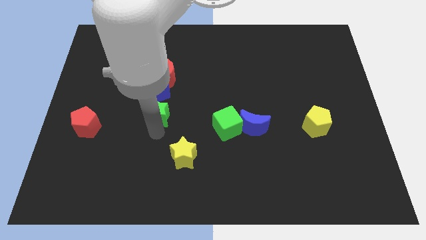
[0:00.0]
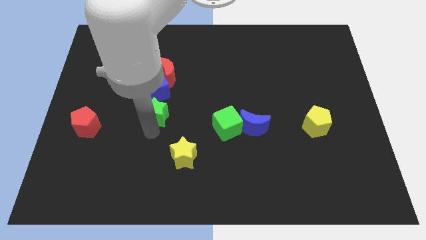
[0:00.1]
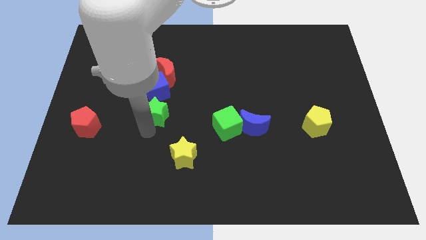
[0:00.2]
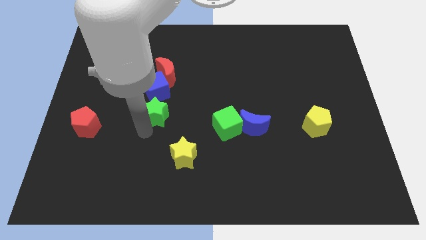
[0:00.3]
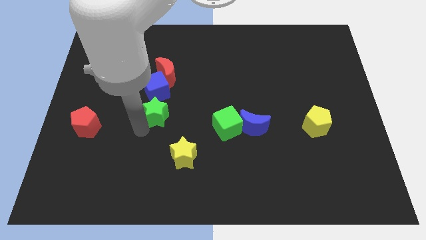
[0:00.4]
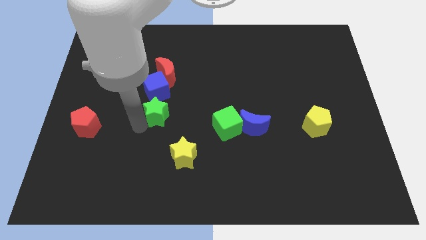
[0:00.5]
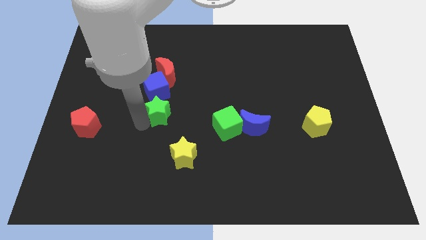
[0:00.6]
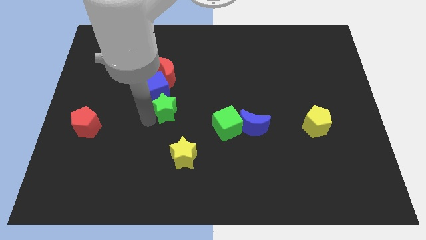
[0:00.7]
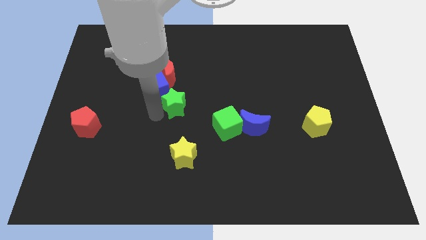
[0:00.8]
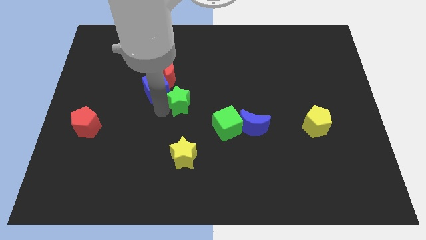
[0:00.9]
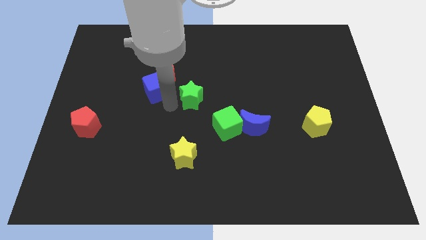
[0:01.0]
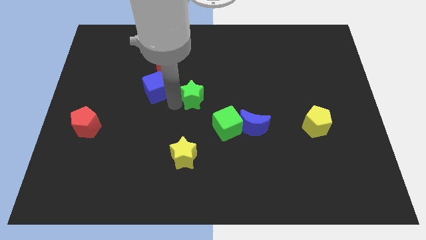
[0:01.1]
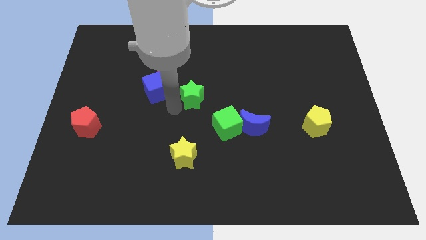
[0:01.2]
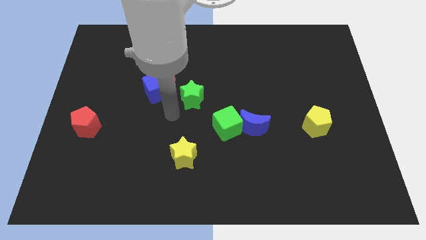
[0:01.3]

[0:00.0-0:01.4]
place green star right to blue cube

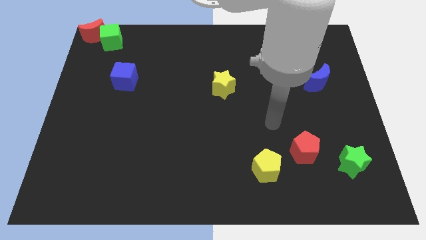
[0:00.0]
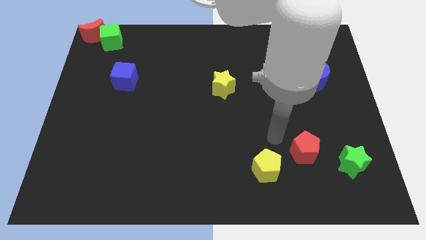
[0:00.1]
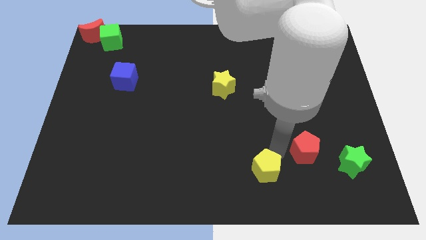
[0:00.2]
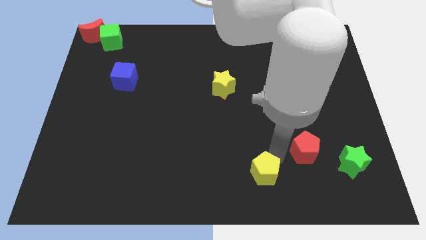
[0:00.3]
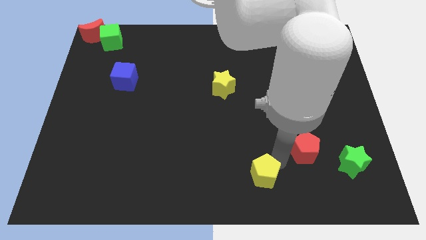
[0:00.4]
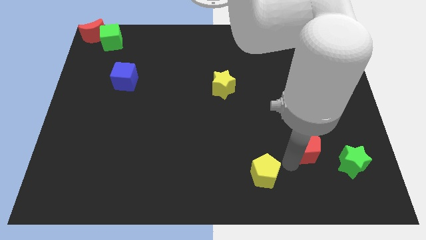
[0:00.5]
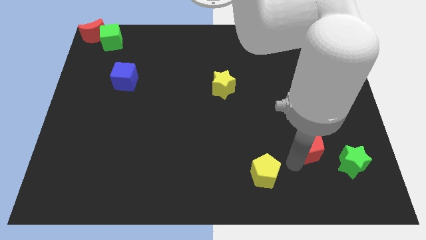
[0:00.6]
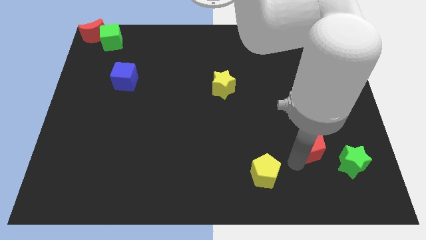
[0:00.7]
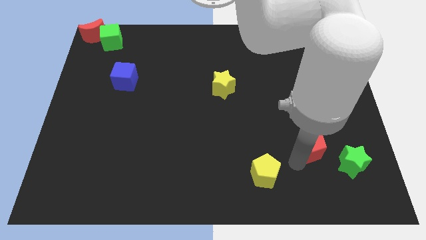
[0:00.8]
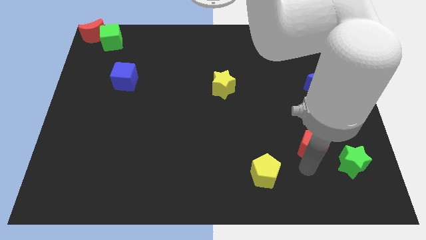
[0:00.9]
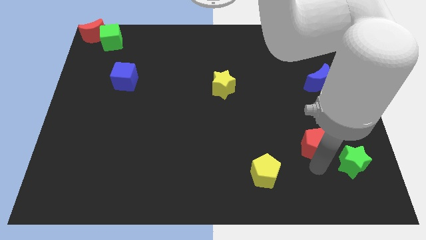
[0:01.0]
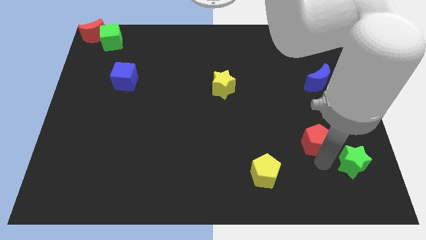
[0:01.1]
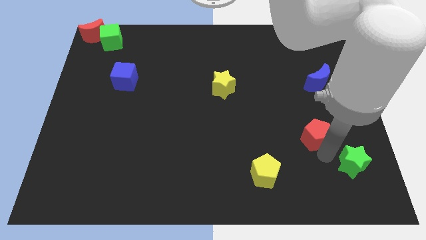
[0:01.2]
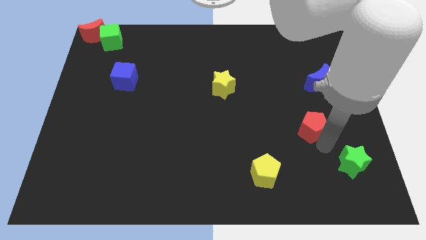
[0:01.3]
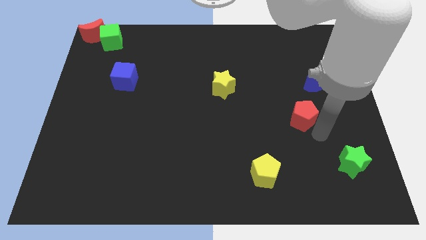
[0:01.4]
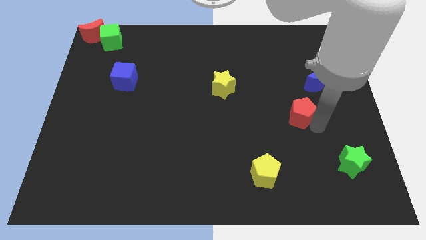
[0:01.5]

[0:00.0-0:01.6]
push the red pentagon slightly upwards

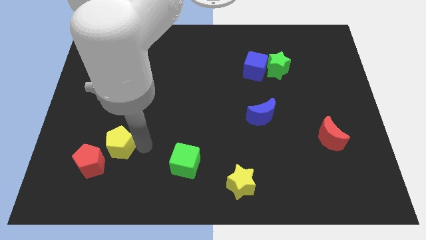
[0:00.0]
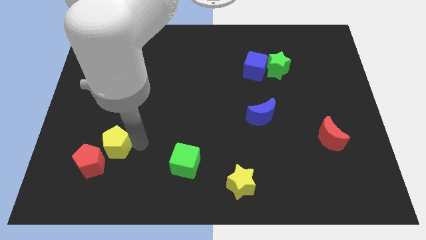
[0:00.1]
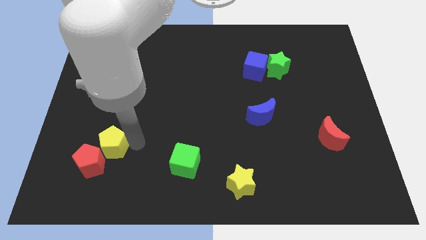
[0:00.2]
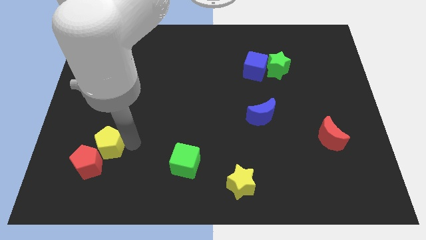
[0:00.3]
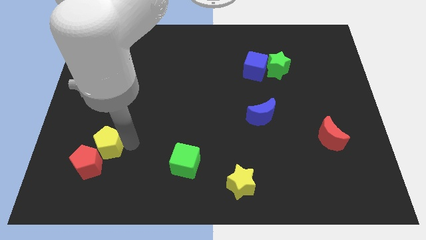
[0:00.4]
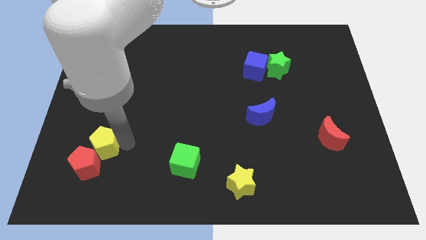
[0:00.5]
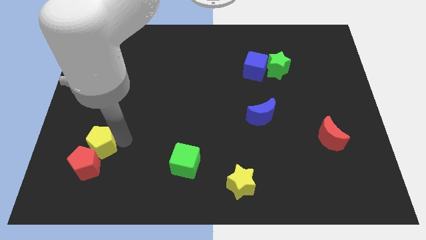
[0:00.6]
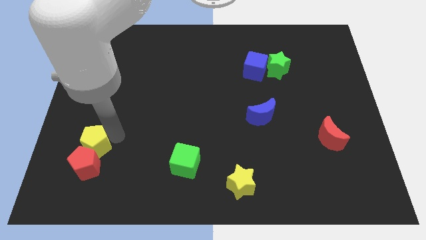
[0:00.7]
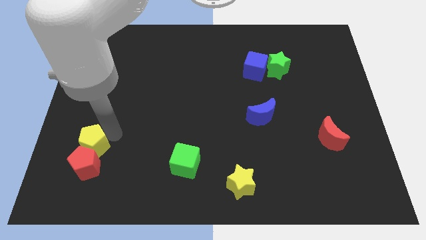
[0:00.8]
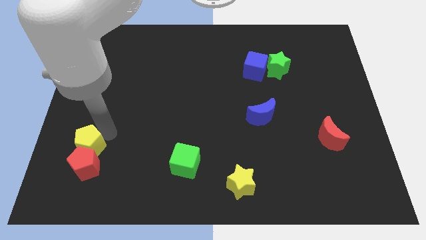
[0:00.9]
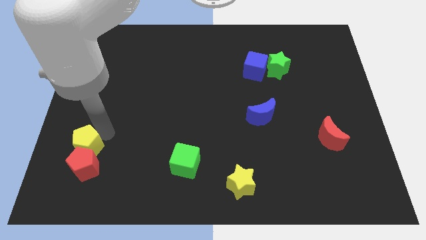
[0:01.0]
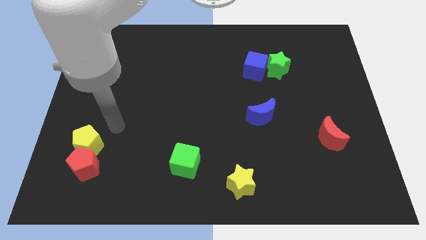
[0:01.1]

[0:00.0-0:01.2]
push the red and yellow pentagons towards the left side of the board

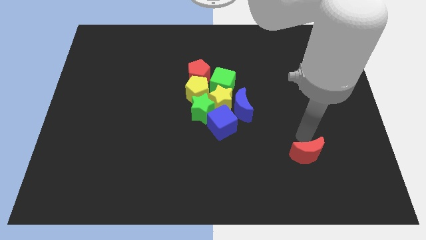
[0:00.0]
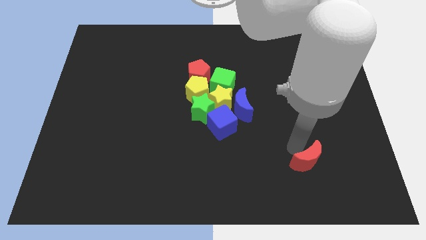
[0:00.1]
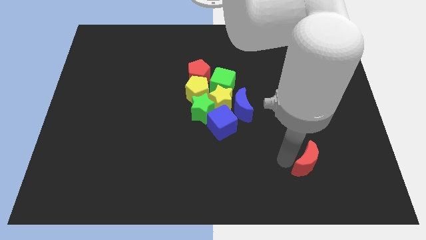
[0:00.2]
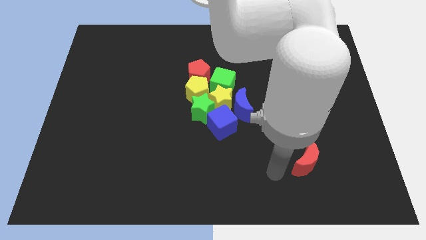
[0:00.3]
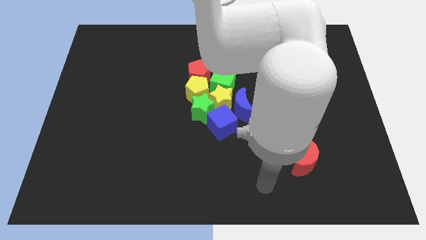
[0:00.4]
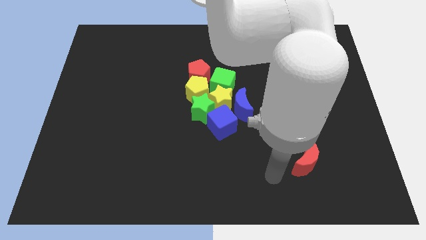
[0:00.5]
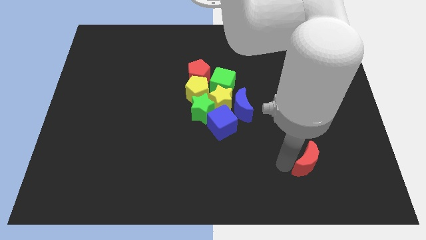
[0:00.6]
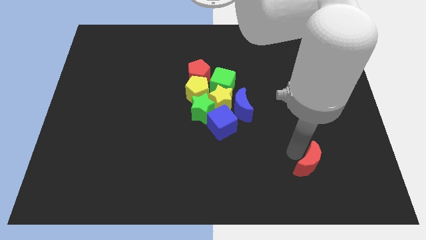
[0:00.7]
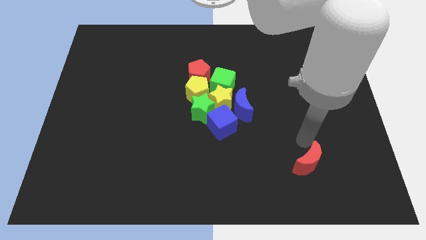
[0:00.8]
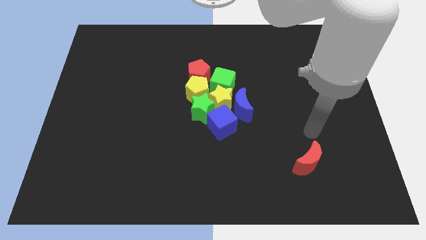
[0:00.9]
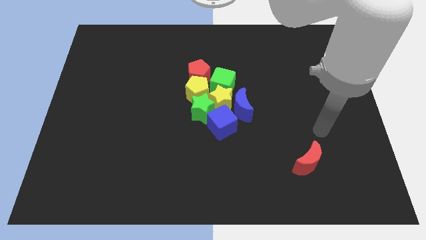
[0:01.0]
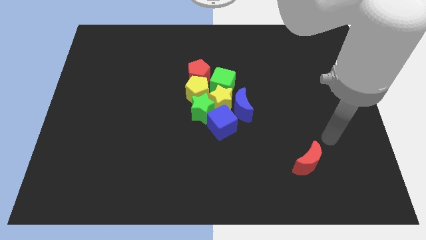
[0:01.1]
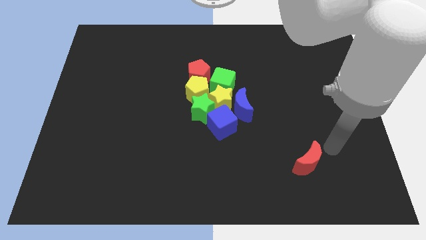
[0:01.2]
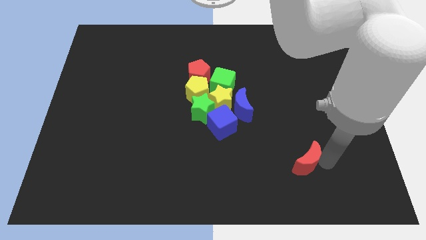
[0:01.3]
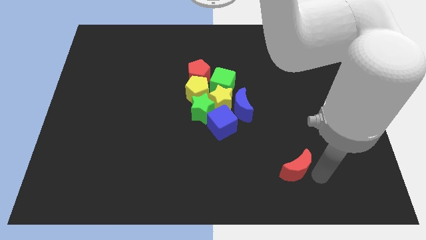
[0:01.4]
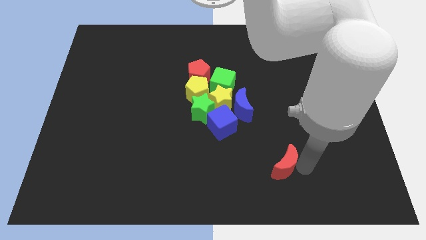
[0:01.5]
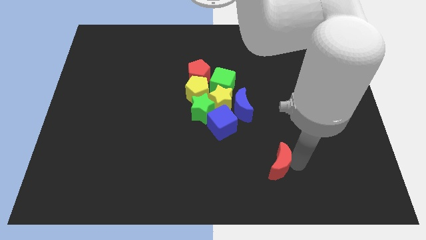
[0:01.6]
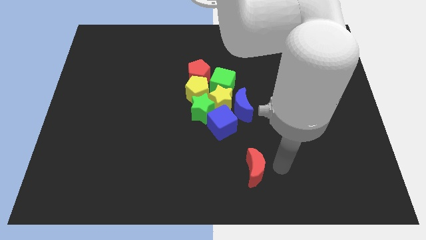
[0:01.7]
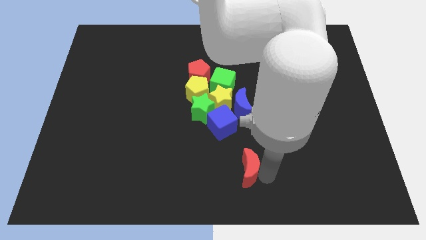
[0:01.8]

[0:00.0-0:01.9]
push the red crescent towards the bottom center of the board

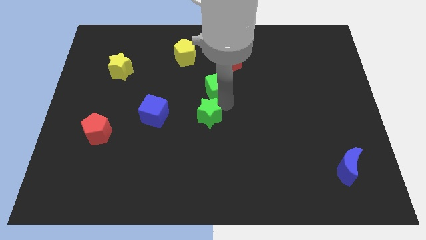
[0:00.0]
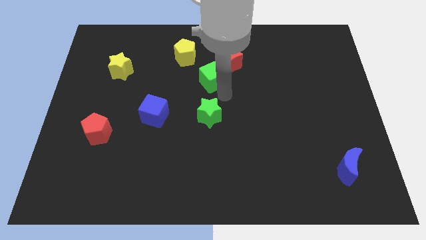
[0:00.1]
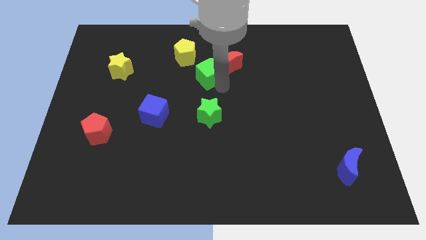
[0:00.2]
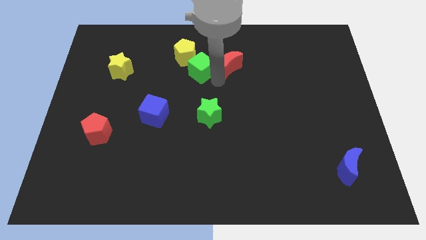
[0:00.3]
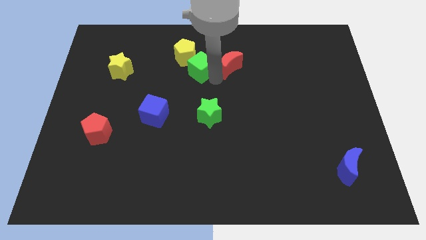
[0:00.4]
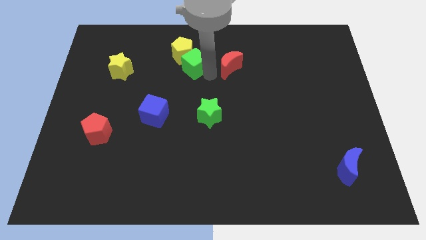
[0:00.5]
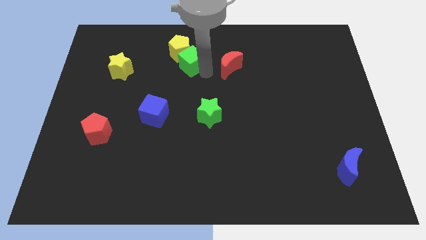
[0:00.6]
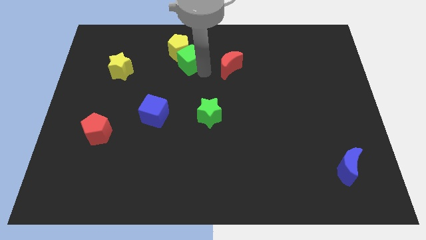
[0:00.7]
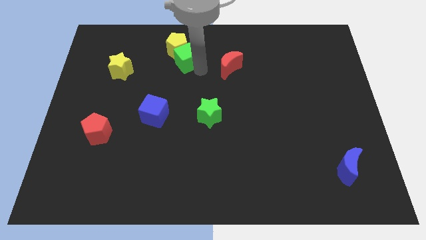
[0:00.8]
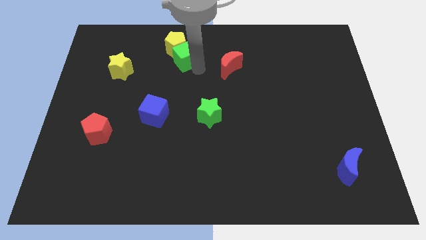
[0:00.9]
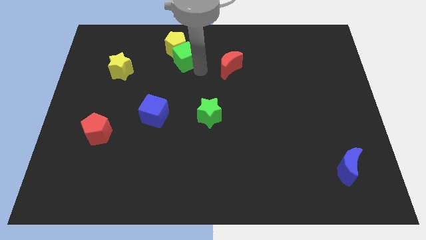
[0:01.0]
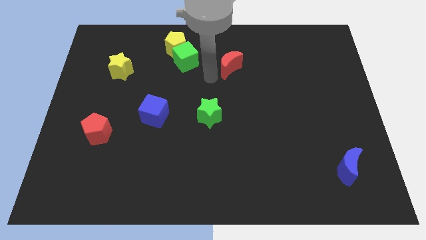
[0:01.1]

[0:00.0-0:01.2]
push the green cube into yellow pentagon

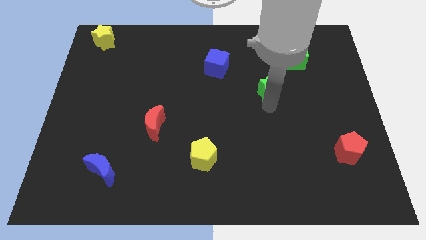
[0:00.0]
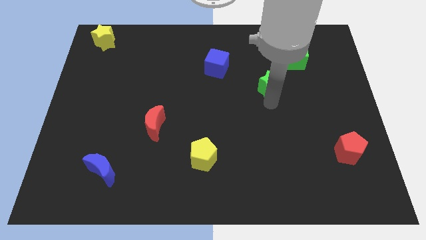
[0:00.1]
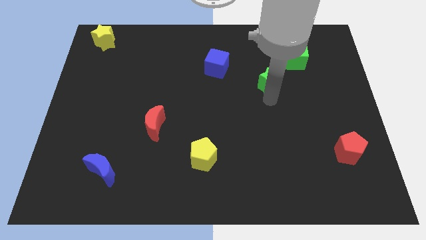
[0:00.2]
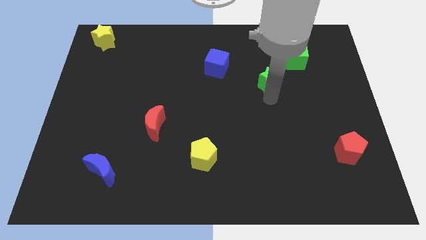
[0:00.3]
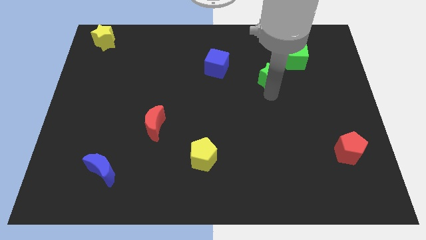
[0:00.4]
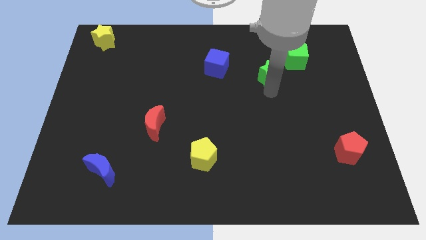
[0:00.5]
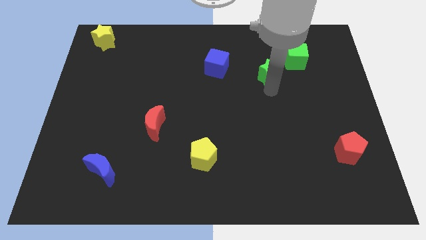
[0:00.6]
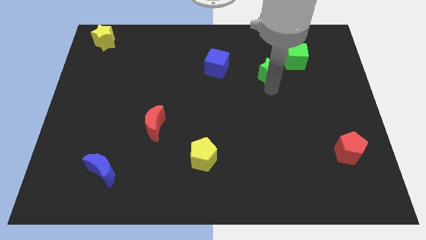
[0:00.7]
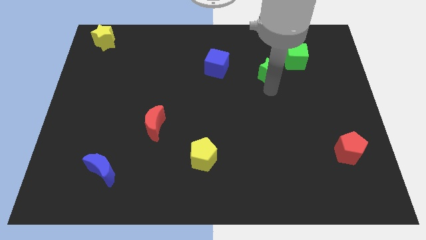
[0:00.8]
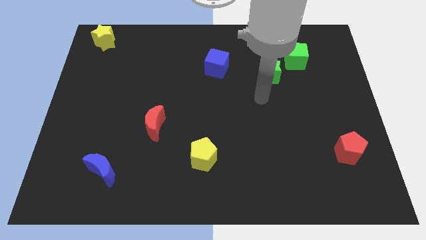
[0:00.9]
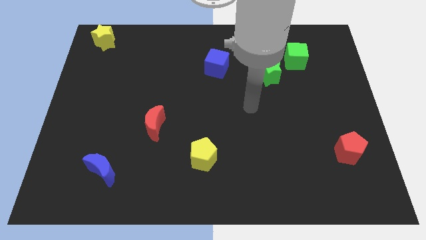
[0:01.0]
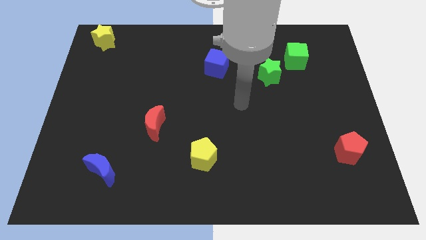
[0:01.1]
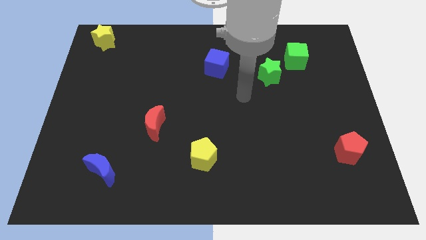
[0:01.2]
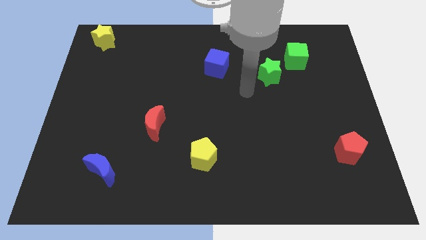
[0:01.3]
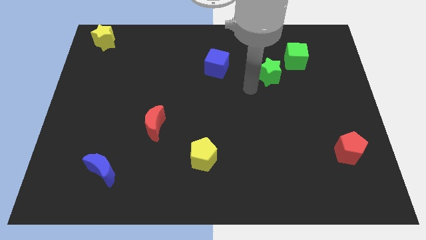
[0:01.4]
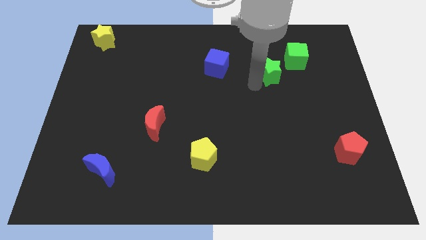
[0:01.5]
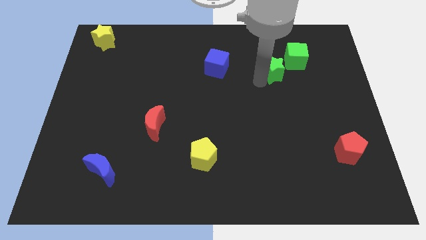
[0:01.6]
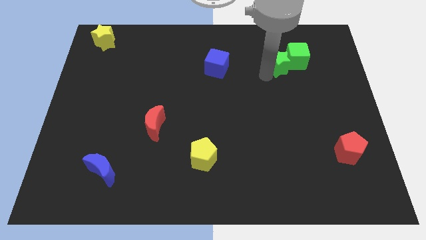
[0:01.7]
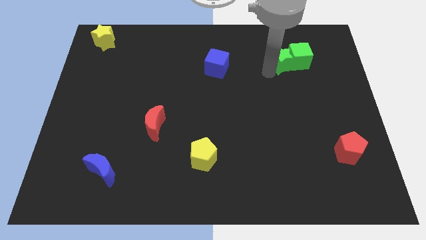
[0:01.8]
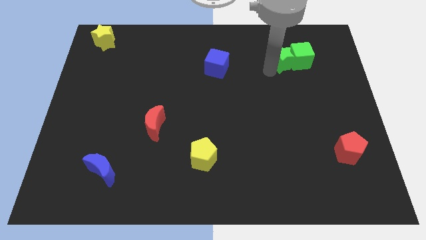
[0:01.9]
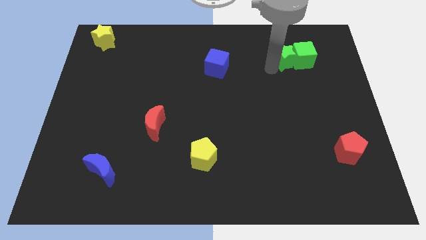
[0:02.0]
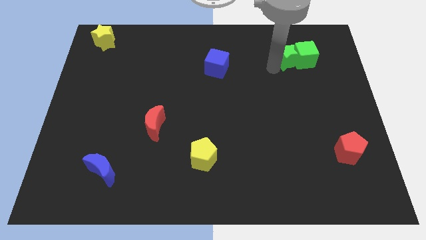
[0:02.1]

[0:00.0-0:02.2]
push green star into the green cube
